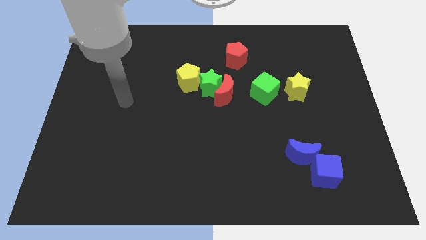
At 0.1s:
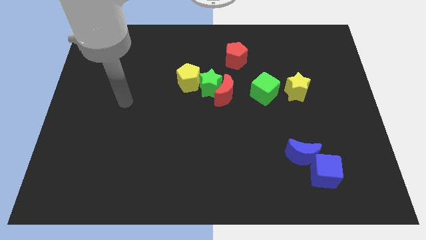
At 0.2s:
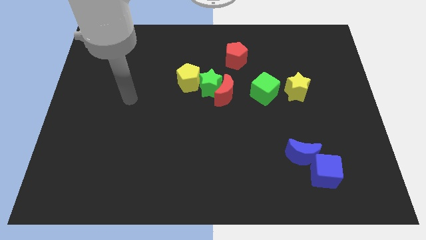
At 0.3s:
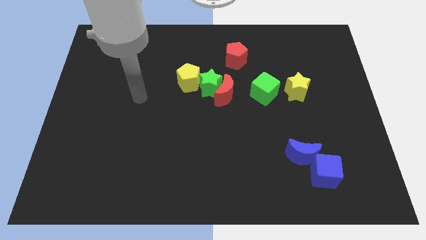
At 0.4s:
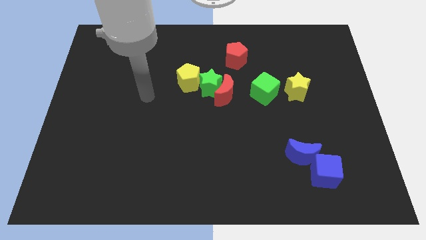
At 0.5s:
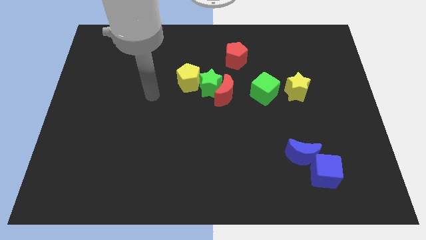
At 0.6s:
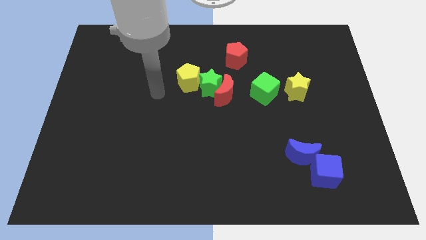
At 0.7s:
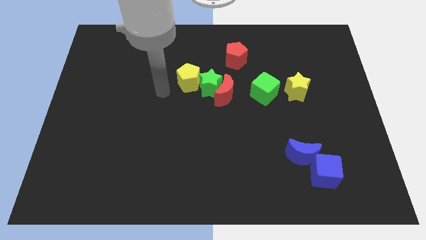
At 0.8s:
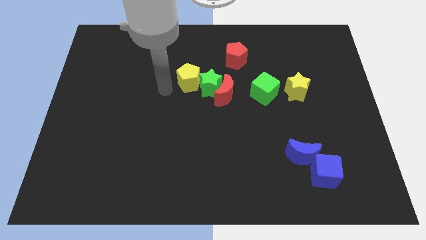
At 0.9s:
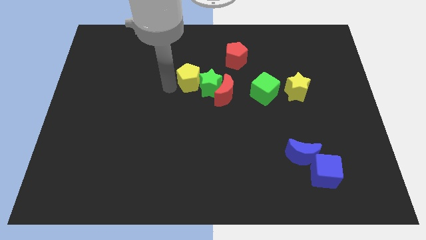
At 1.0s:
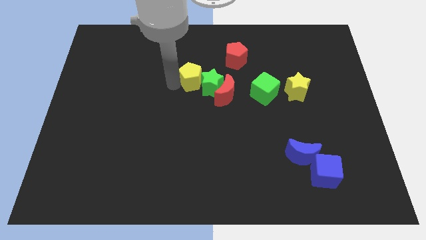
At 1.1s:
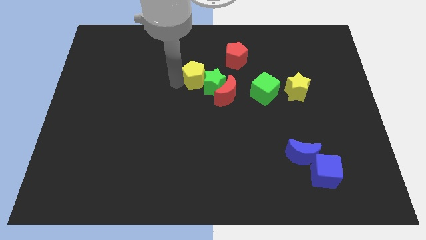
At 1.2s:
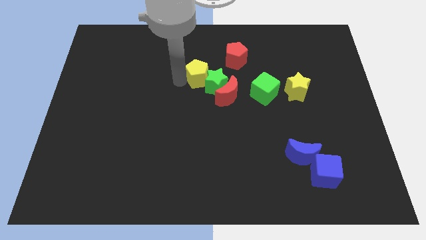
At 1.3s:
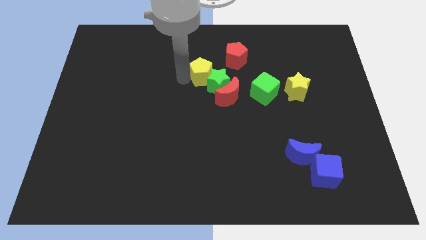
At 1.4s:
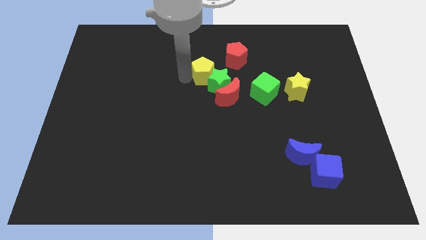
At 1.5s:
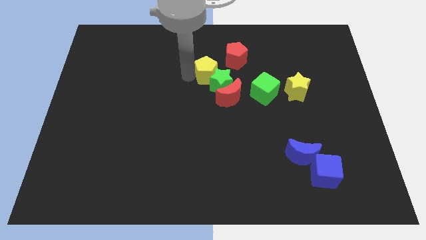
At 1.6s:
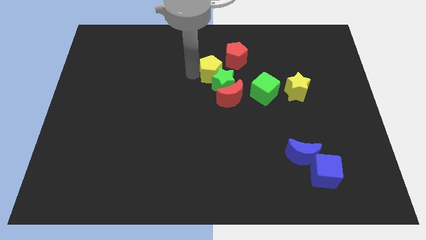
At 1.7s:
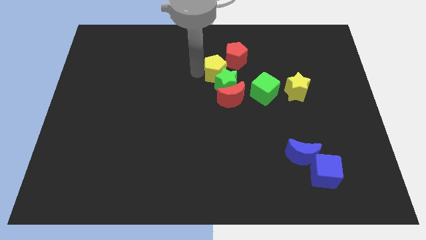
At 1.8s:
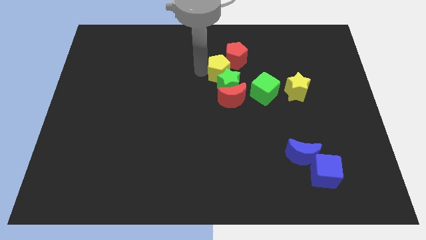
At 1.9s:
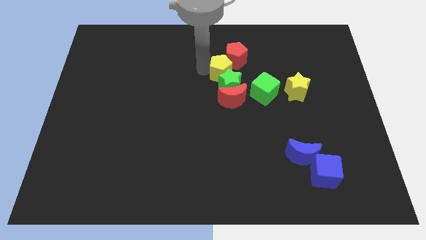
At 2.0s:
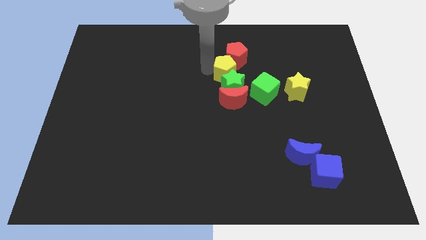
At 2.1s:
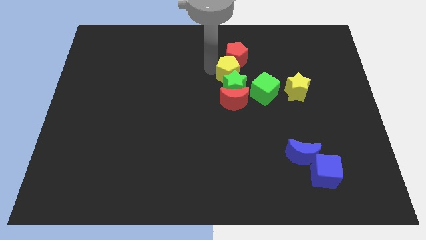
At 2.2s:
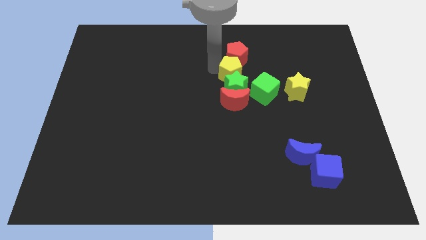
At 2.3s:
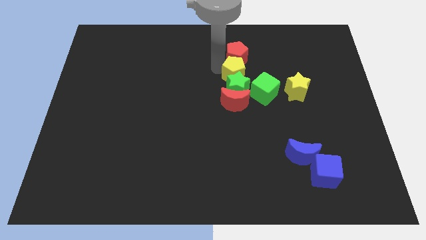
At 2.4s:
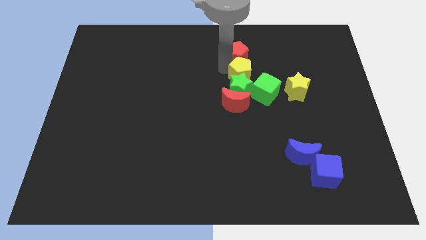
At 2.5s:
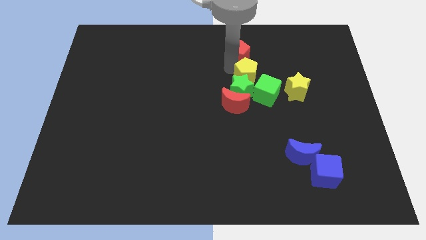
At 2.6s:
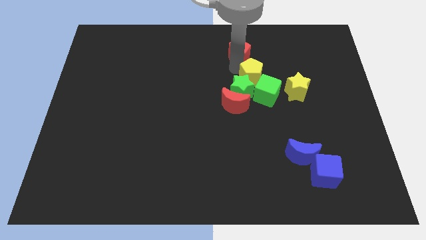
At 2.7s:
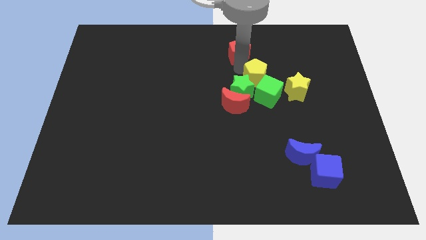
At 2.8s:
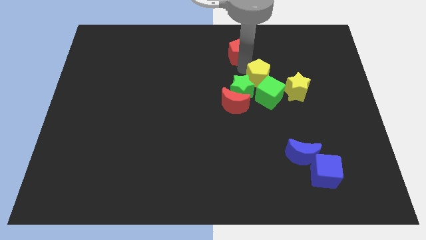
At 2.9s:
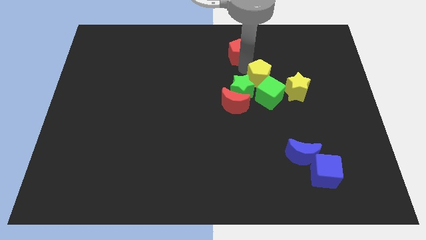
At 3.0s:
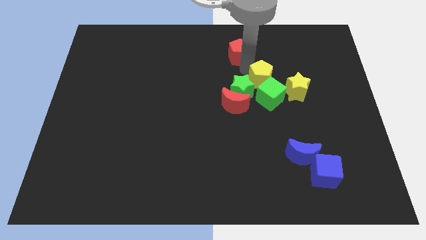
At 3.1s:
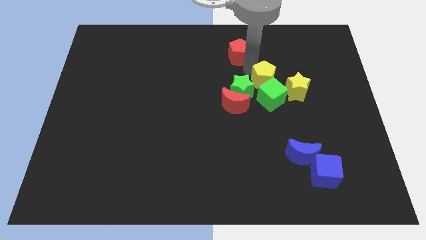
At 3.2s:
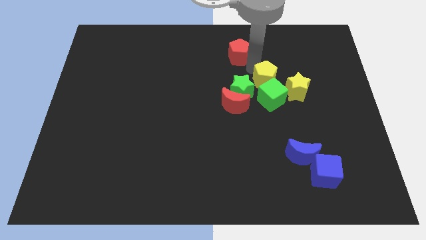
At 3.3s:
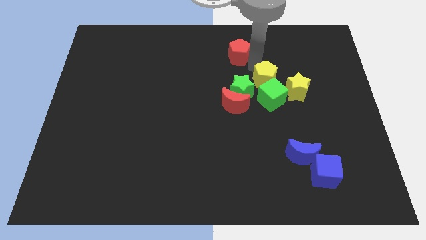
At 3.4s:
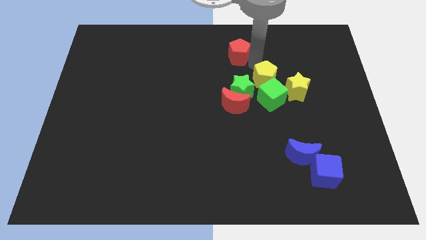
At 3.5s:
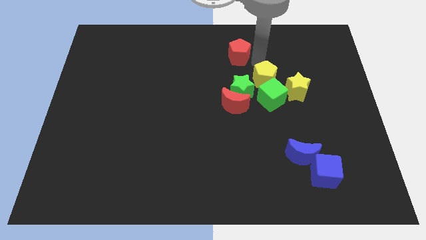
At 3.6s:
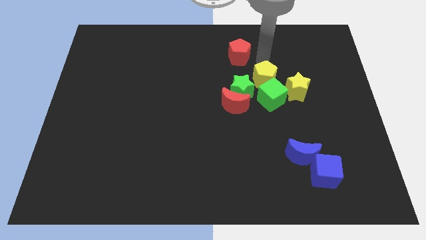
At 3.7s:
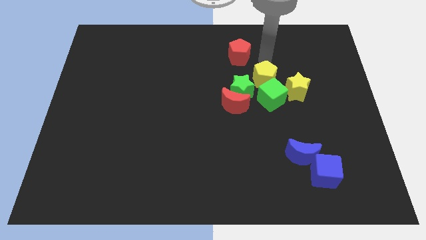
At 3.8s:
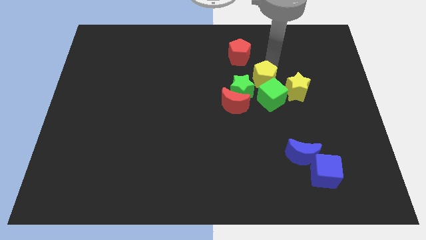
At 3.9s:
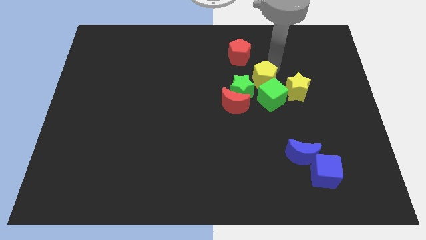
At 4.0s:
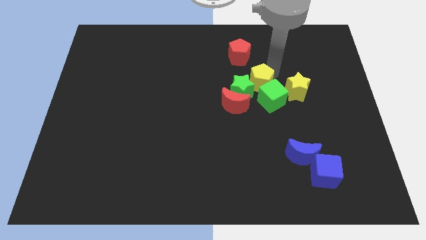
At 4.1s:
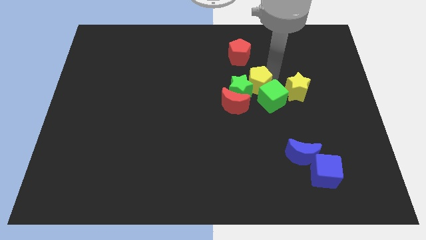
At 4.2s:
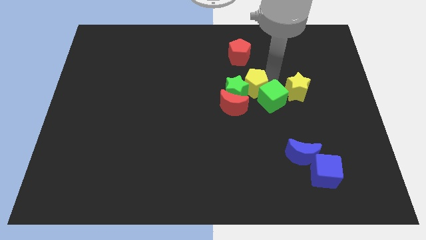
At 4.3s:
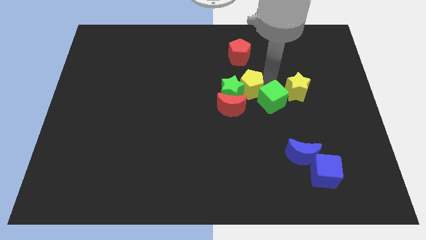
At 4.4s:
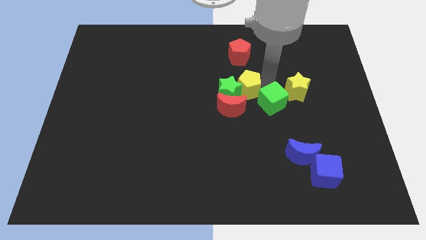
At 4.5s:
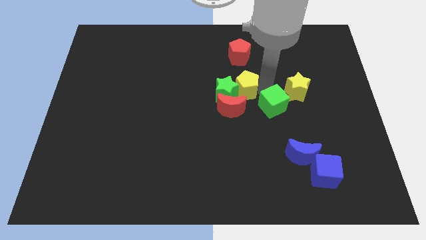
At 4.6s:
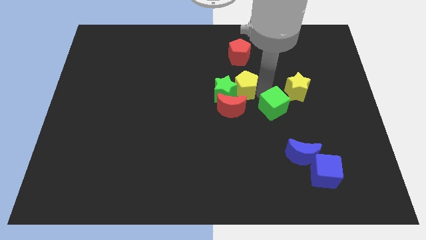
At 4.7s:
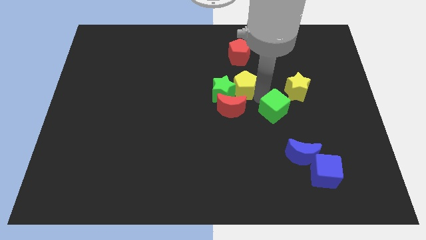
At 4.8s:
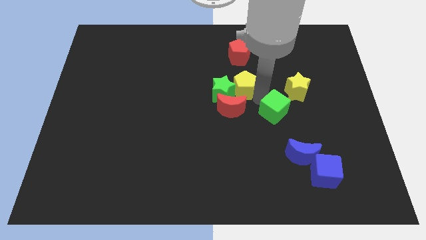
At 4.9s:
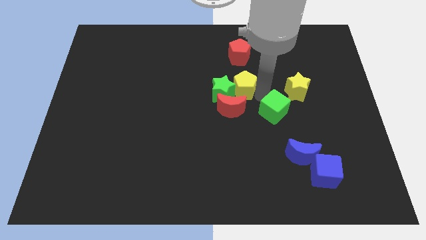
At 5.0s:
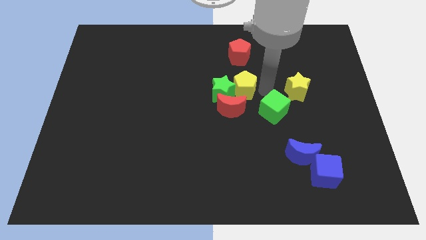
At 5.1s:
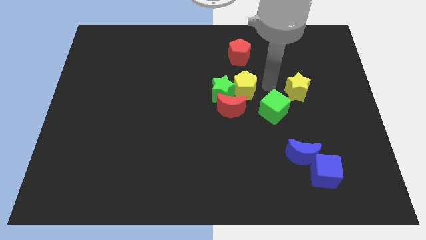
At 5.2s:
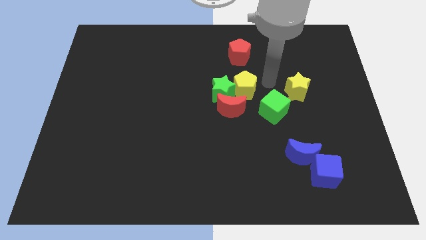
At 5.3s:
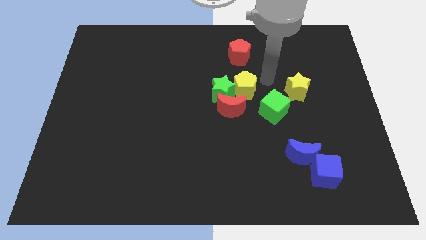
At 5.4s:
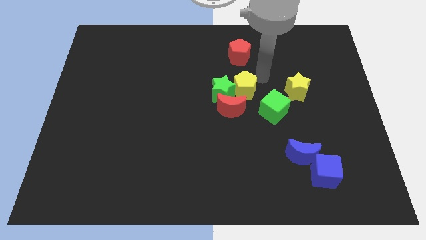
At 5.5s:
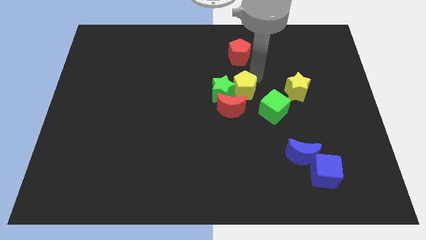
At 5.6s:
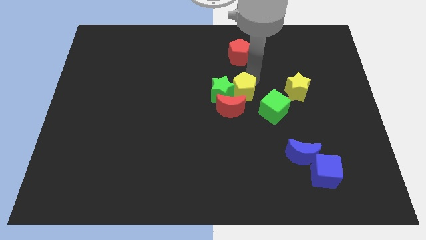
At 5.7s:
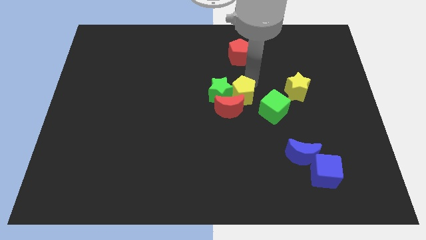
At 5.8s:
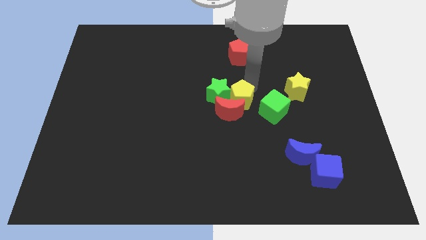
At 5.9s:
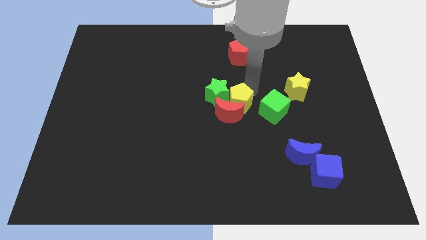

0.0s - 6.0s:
move the yellow pentagon towards the red moon

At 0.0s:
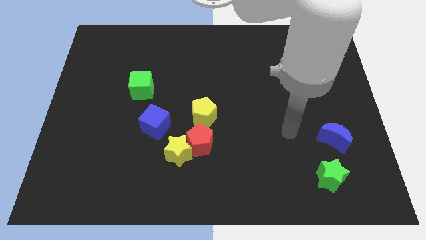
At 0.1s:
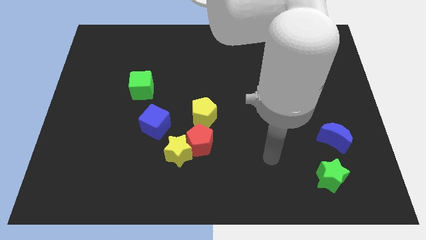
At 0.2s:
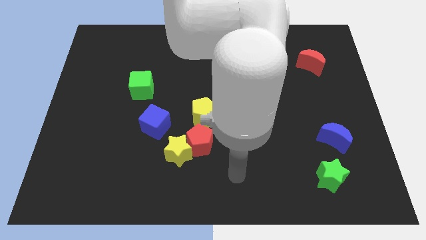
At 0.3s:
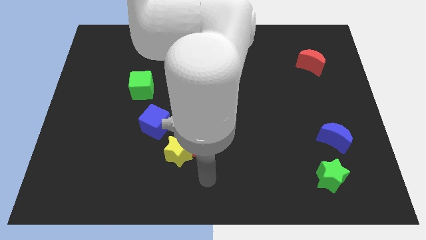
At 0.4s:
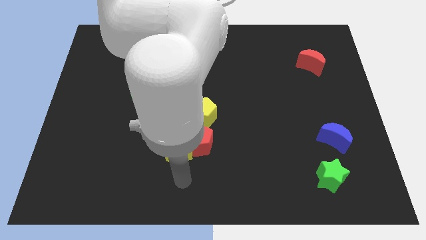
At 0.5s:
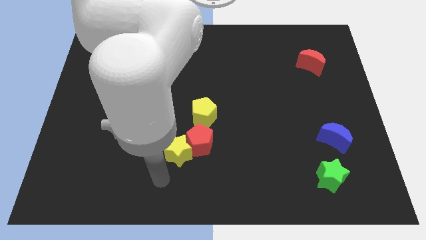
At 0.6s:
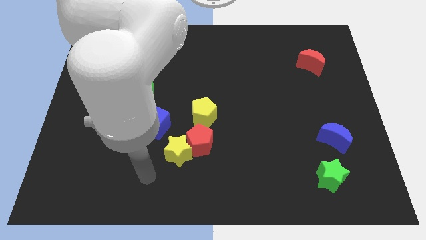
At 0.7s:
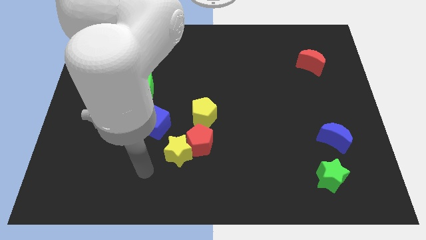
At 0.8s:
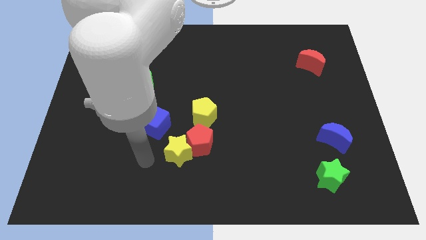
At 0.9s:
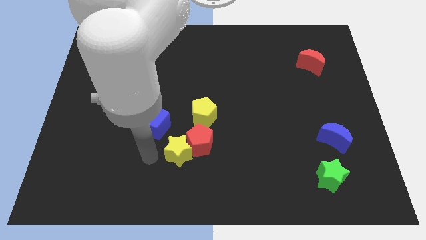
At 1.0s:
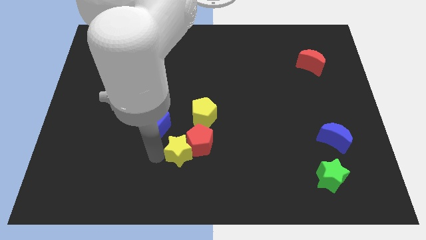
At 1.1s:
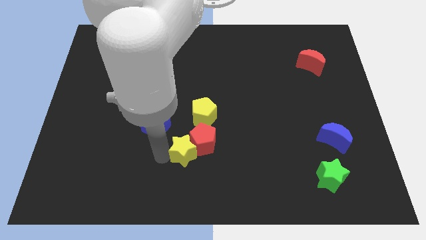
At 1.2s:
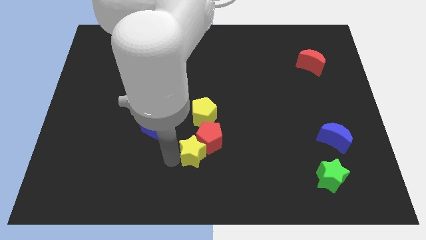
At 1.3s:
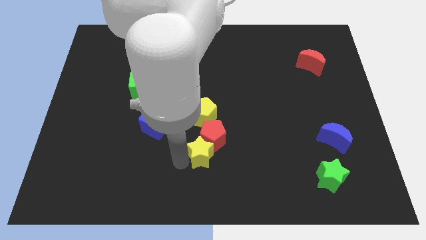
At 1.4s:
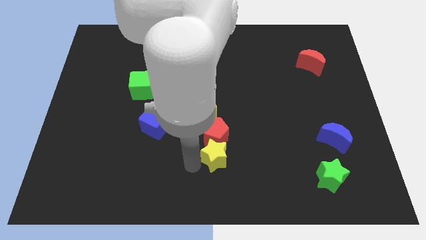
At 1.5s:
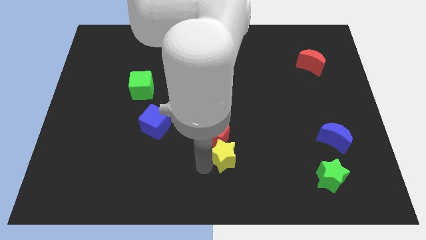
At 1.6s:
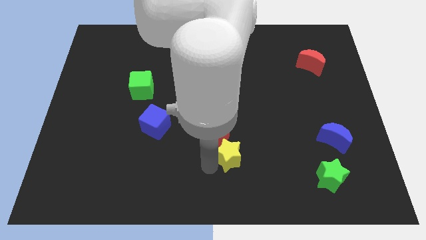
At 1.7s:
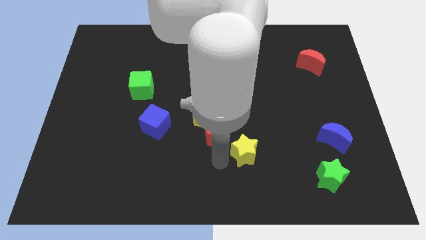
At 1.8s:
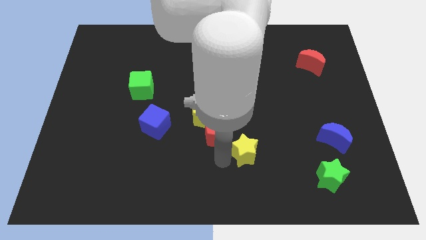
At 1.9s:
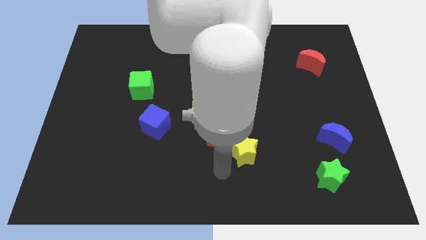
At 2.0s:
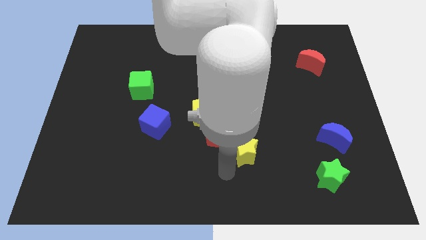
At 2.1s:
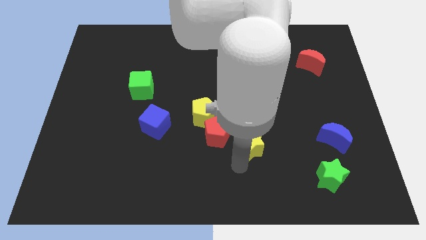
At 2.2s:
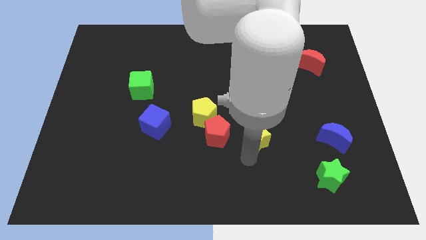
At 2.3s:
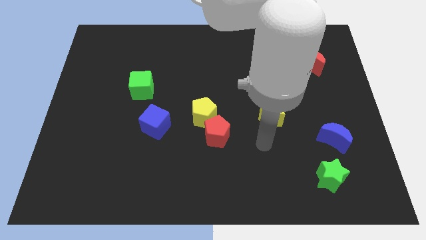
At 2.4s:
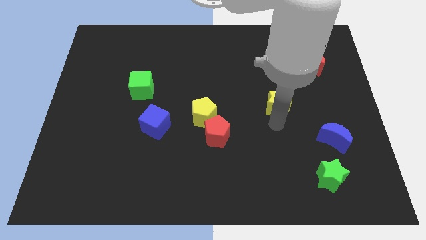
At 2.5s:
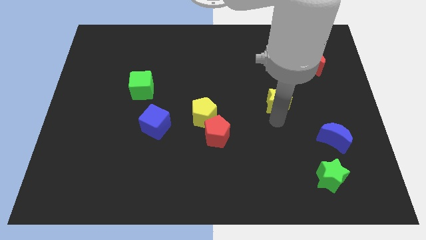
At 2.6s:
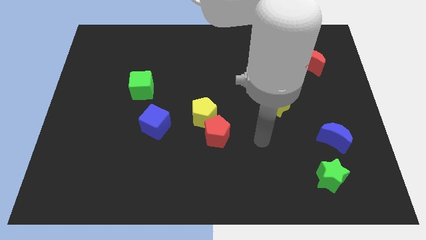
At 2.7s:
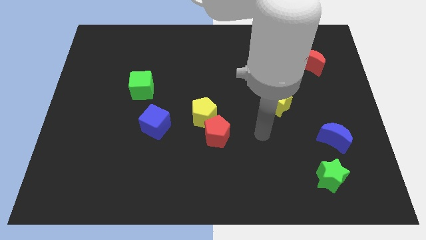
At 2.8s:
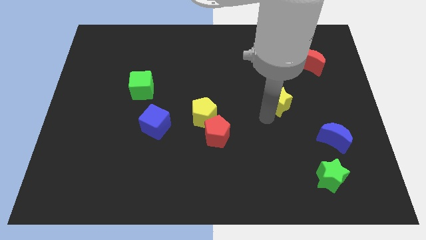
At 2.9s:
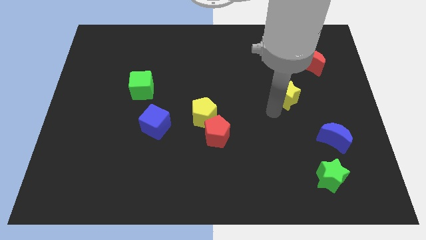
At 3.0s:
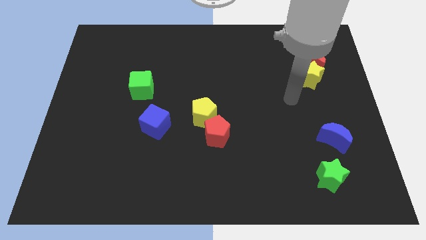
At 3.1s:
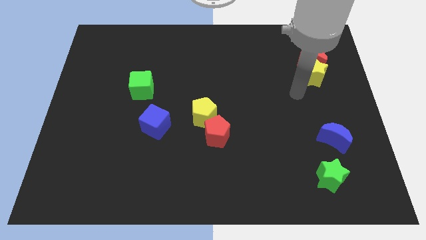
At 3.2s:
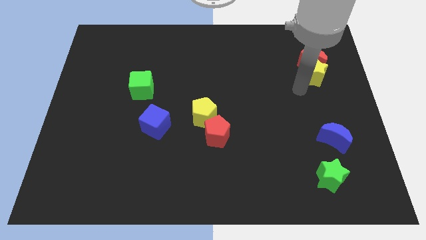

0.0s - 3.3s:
push the yellow star towards the red moon
